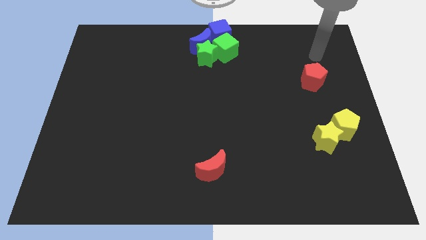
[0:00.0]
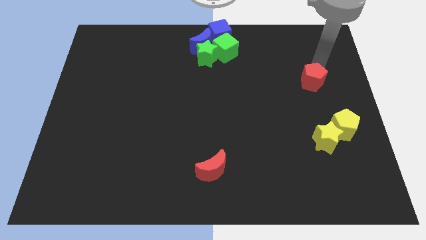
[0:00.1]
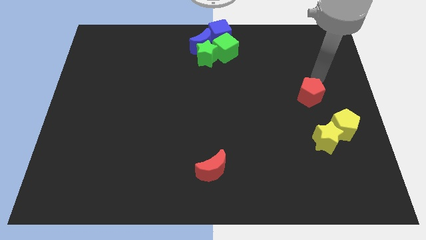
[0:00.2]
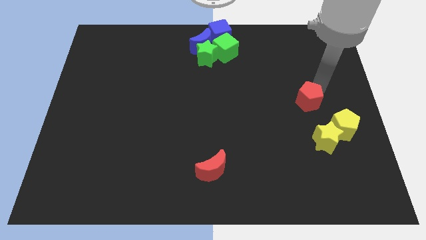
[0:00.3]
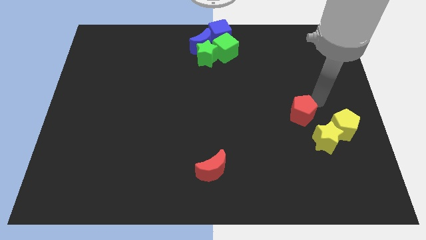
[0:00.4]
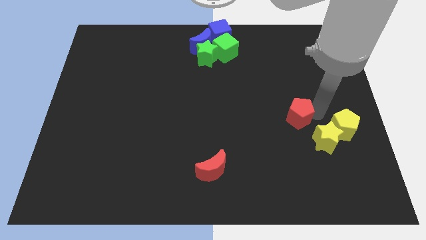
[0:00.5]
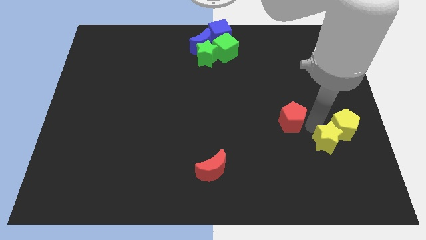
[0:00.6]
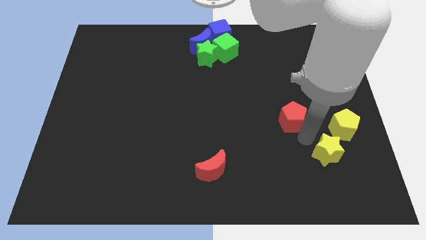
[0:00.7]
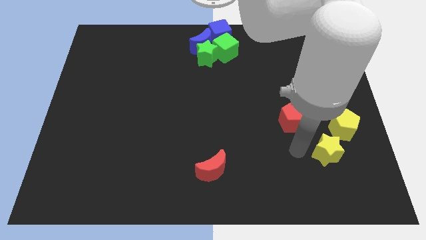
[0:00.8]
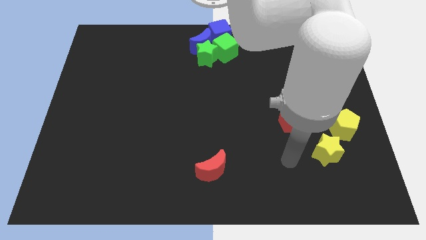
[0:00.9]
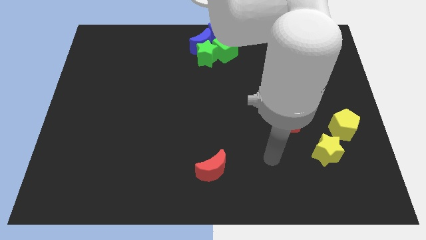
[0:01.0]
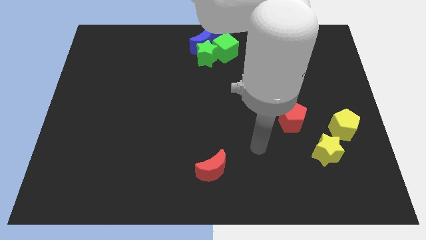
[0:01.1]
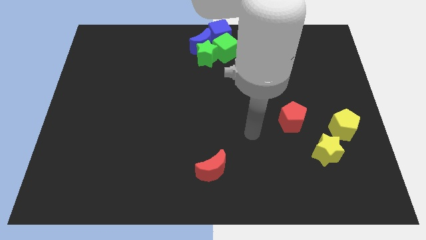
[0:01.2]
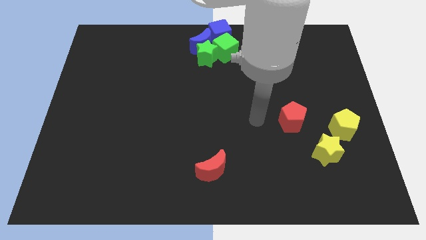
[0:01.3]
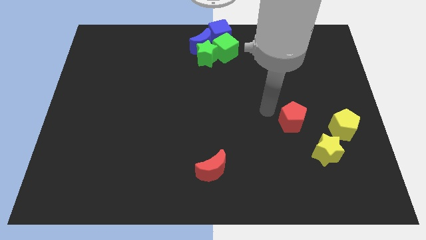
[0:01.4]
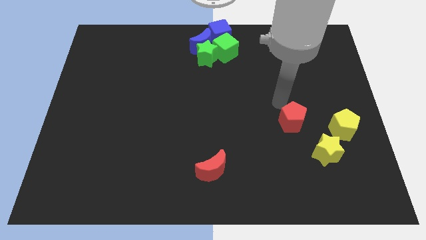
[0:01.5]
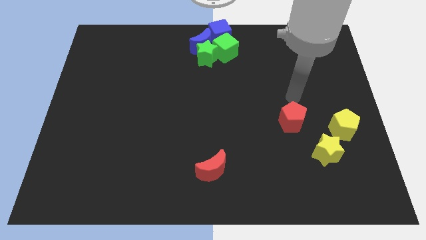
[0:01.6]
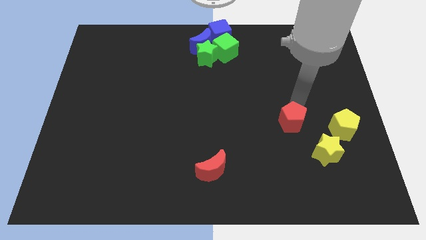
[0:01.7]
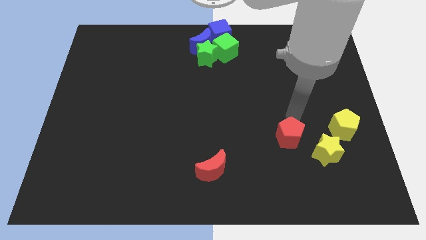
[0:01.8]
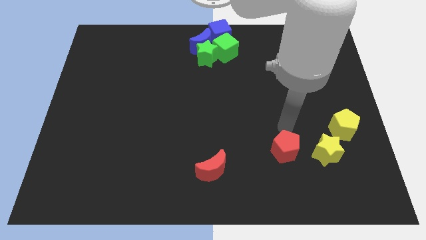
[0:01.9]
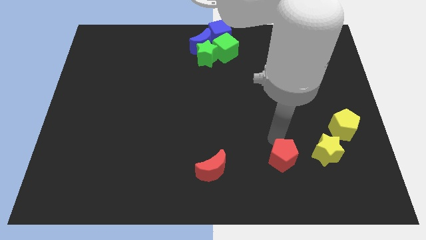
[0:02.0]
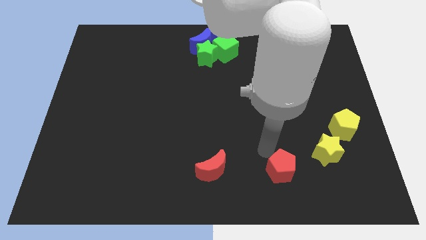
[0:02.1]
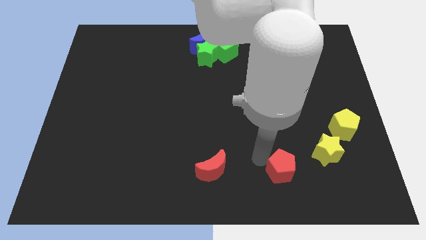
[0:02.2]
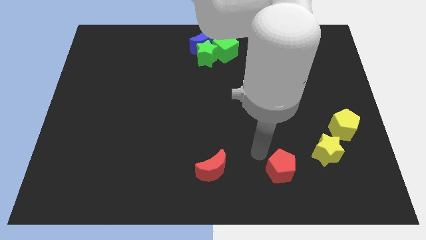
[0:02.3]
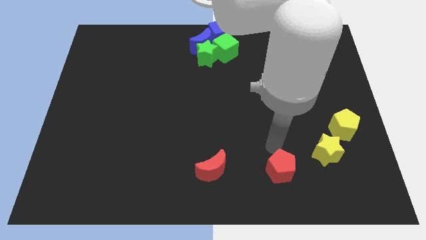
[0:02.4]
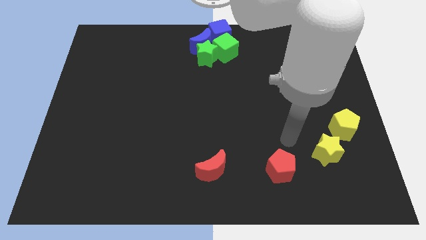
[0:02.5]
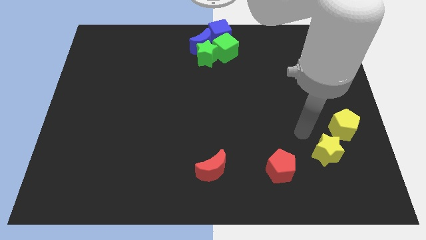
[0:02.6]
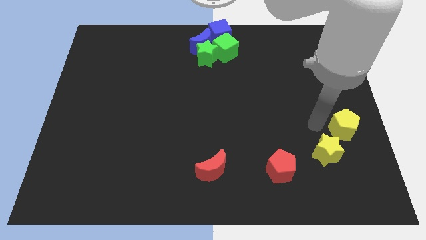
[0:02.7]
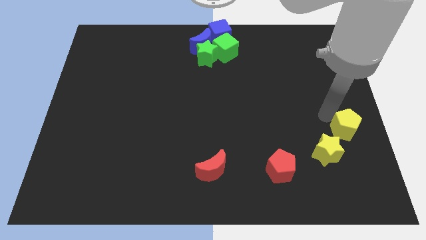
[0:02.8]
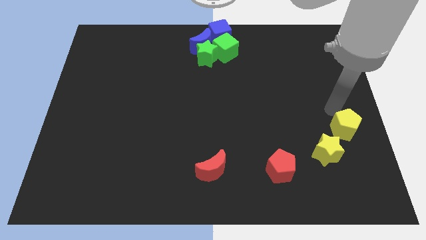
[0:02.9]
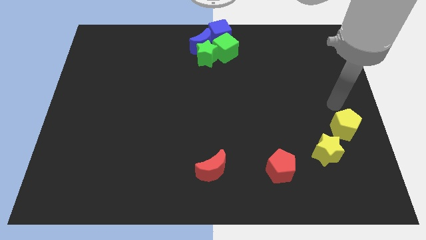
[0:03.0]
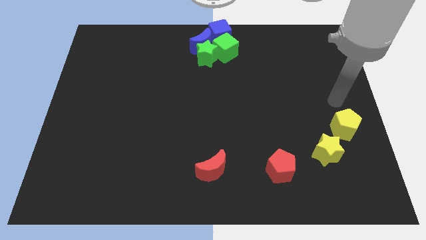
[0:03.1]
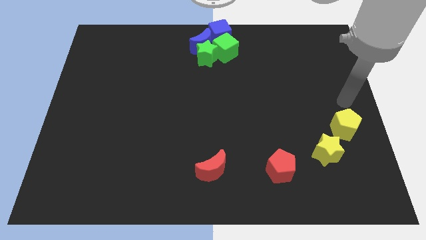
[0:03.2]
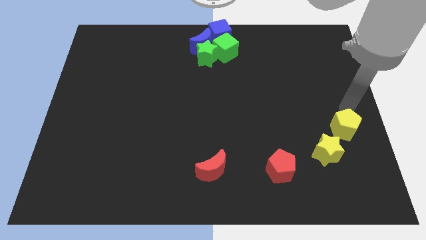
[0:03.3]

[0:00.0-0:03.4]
place the red pentagon to the right of the red crescent

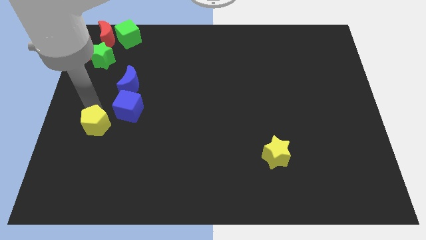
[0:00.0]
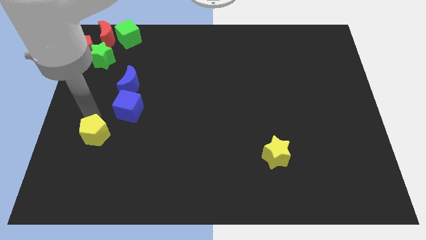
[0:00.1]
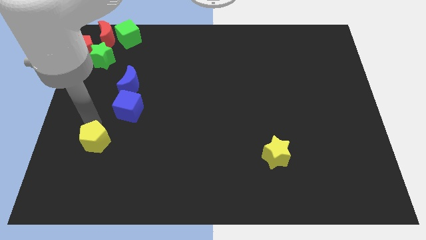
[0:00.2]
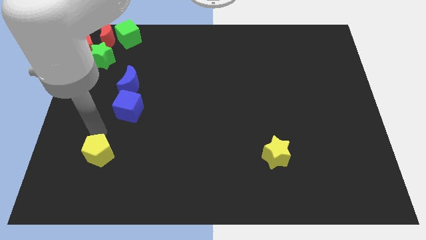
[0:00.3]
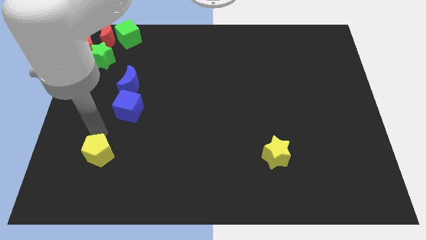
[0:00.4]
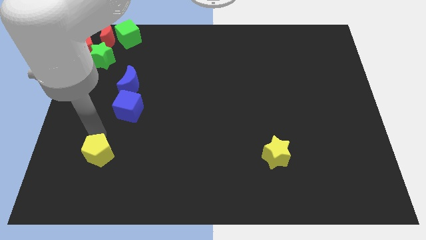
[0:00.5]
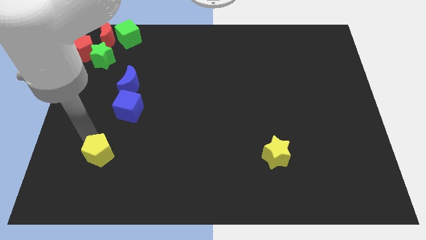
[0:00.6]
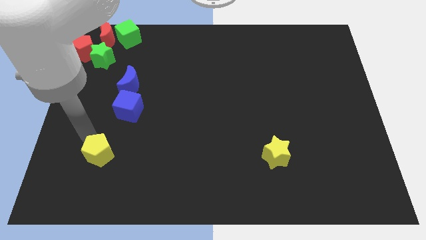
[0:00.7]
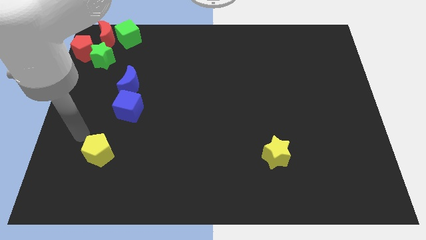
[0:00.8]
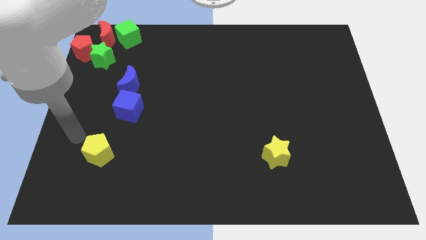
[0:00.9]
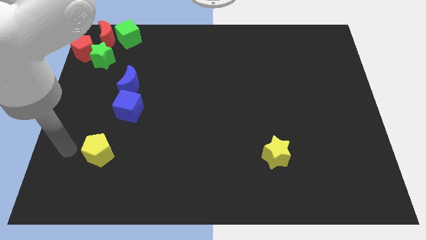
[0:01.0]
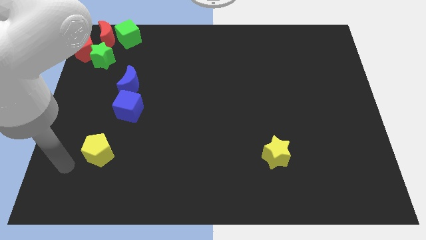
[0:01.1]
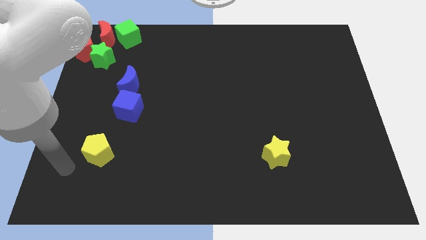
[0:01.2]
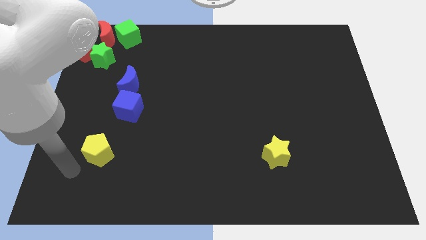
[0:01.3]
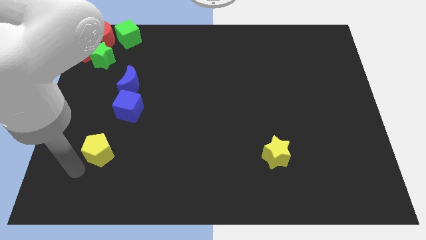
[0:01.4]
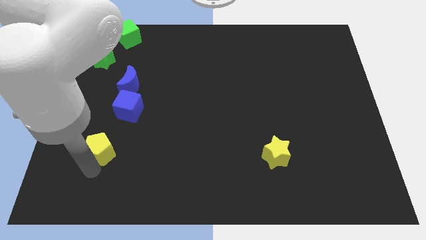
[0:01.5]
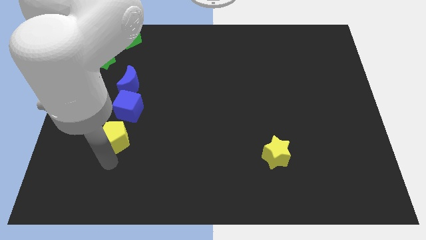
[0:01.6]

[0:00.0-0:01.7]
move the yellow pentagon slightly downwards

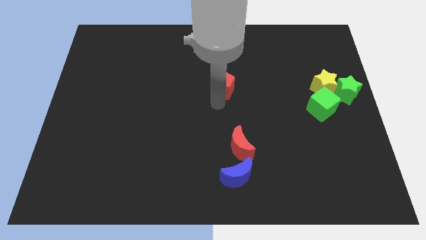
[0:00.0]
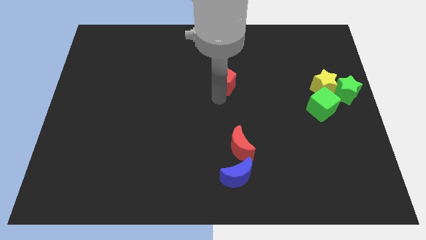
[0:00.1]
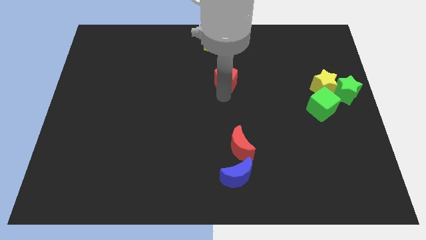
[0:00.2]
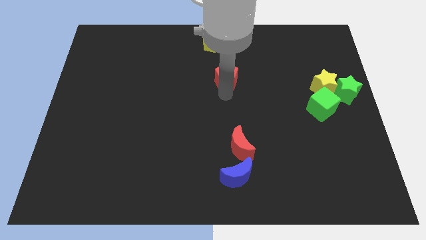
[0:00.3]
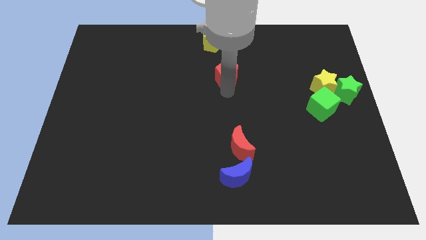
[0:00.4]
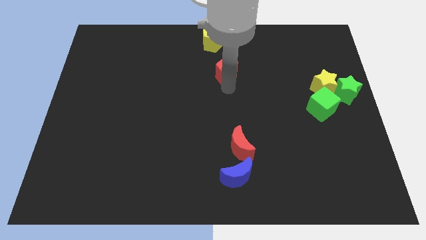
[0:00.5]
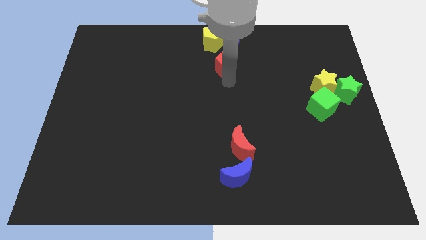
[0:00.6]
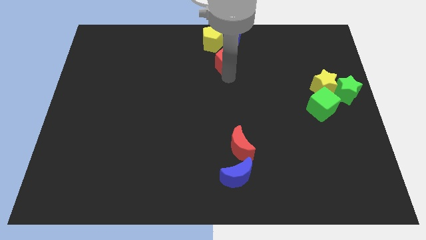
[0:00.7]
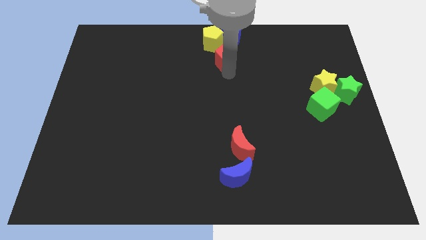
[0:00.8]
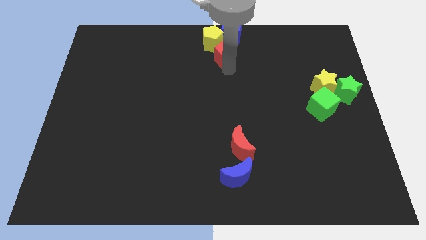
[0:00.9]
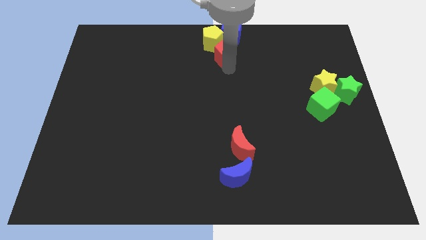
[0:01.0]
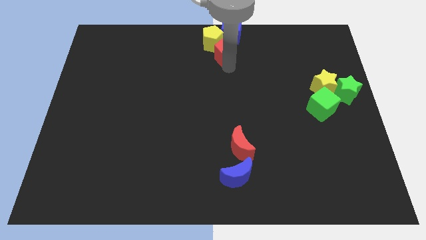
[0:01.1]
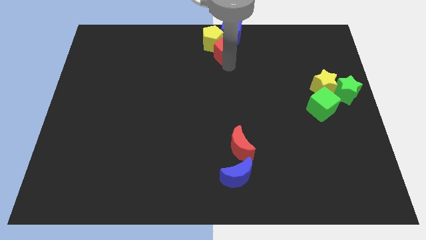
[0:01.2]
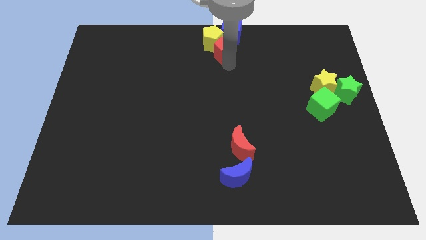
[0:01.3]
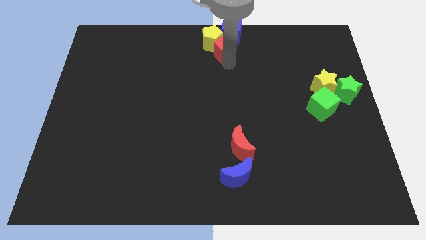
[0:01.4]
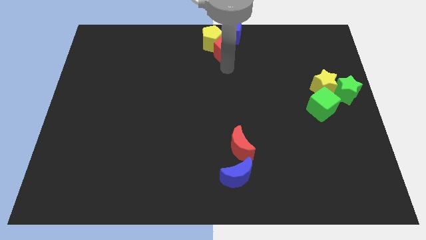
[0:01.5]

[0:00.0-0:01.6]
slide the red pentagon into the group of blocks

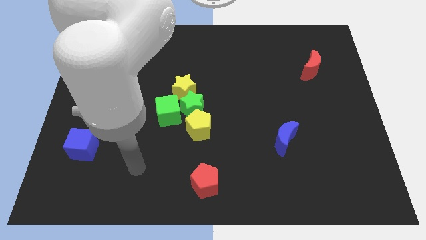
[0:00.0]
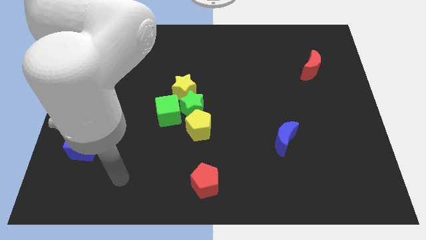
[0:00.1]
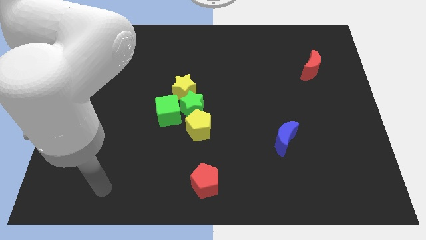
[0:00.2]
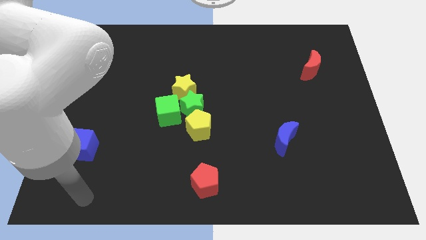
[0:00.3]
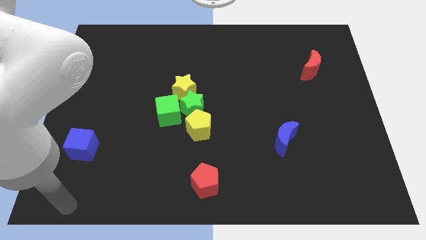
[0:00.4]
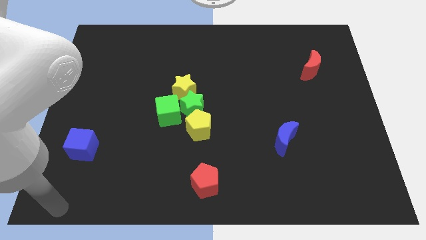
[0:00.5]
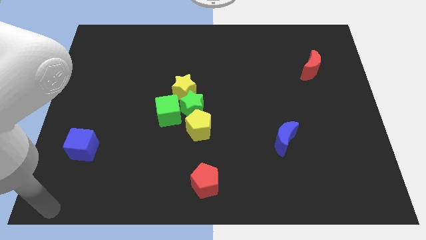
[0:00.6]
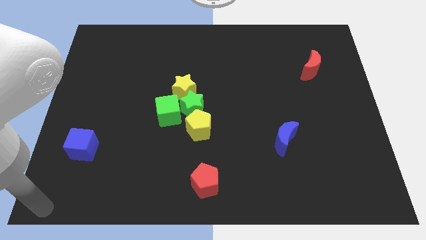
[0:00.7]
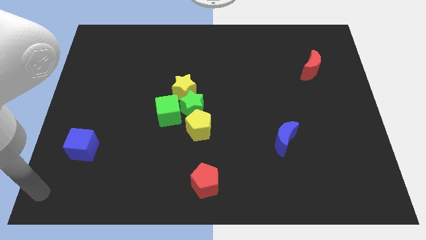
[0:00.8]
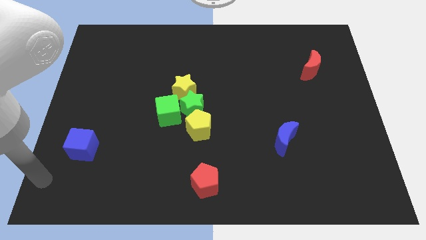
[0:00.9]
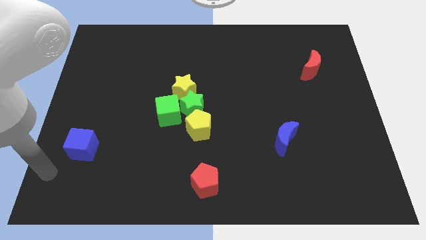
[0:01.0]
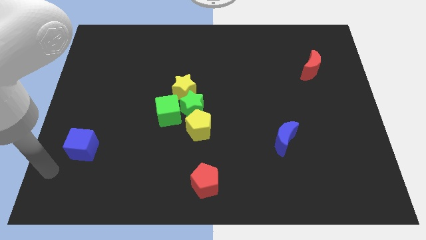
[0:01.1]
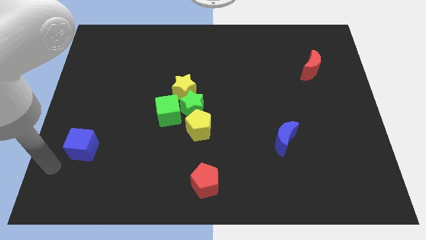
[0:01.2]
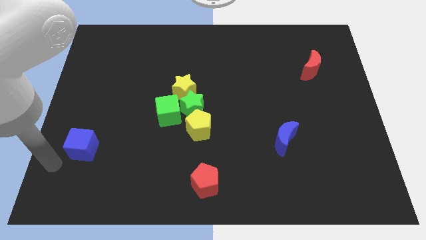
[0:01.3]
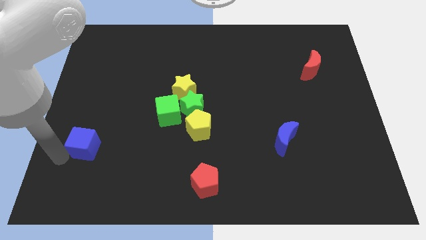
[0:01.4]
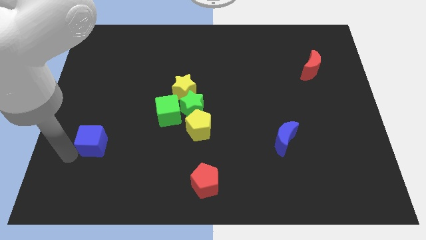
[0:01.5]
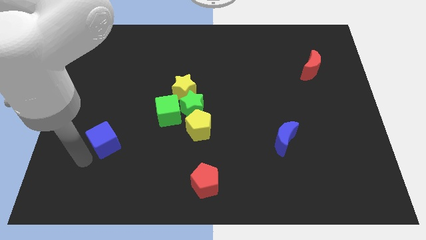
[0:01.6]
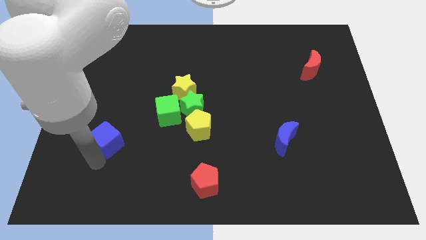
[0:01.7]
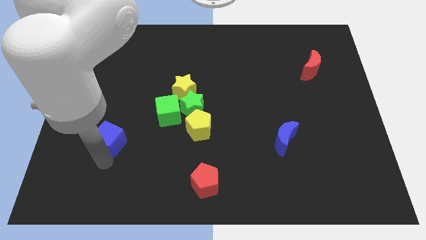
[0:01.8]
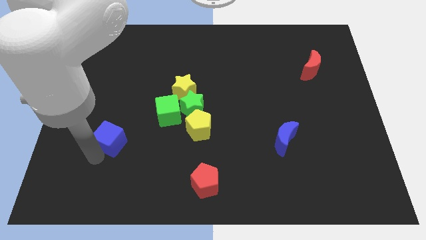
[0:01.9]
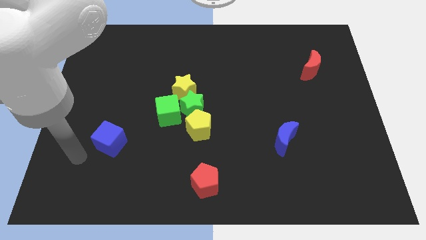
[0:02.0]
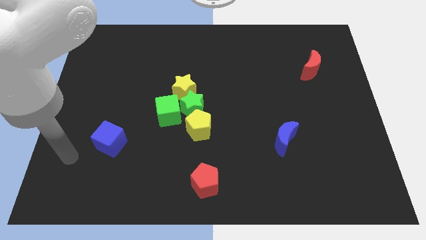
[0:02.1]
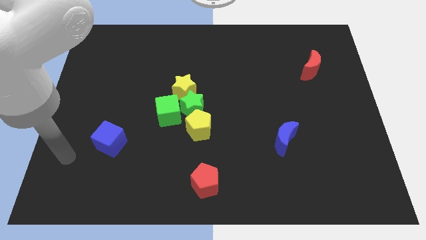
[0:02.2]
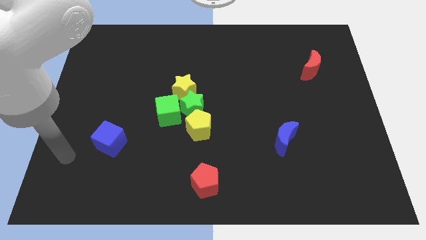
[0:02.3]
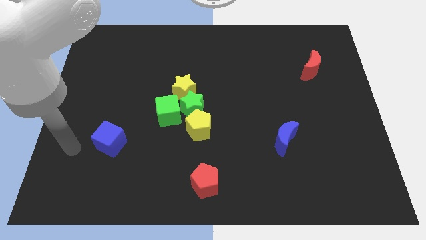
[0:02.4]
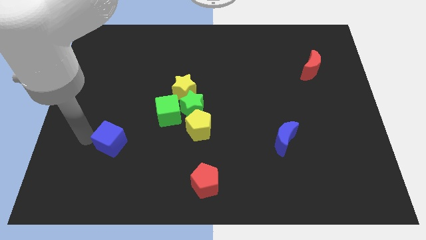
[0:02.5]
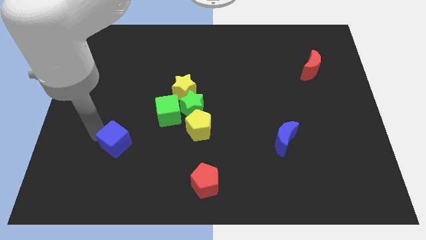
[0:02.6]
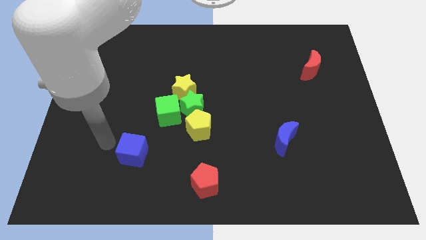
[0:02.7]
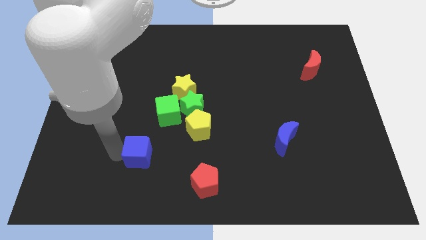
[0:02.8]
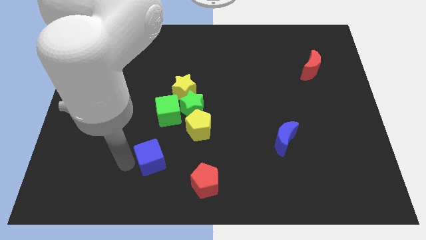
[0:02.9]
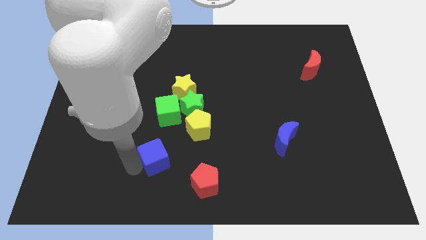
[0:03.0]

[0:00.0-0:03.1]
place the blue cube diagonally to the green cube
